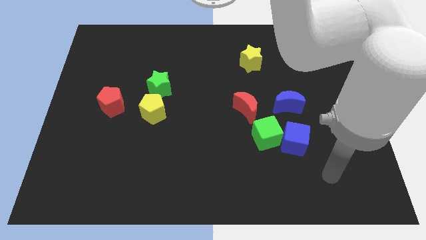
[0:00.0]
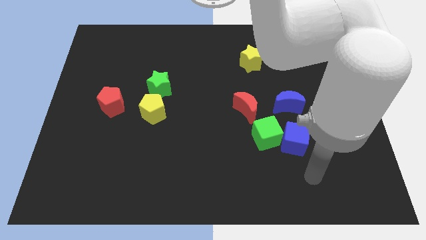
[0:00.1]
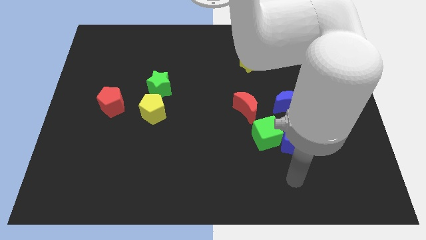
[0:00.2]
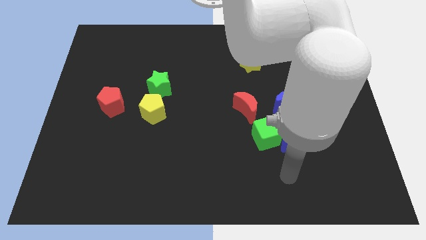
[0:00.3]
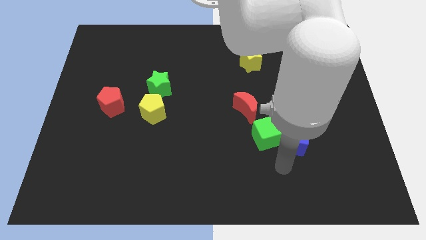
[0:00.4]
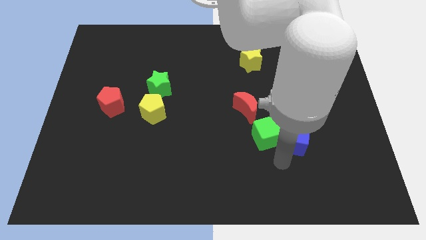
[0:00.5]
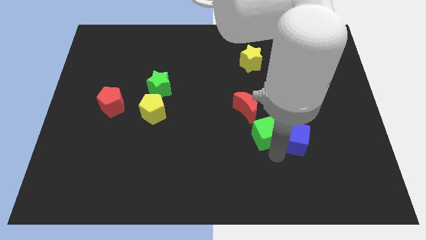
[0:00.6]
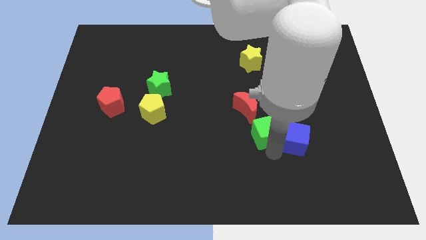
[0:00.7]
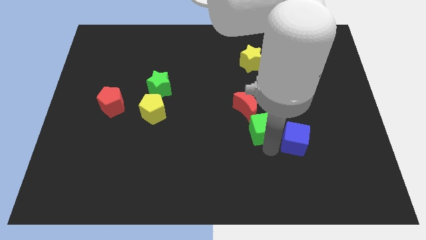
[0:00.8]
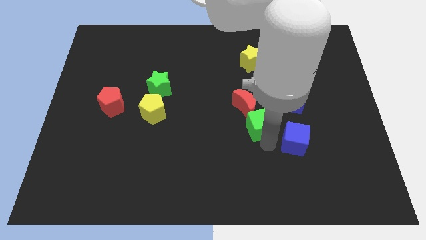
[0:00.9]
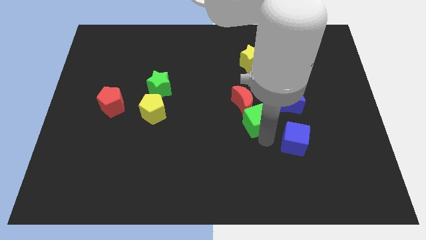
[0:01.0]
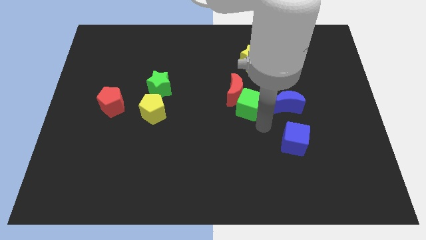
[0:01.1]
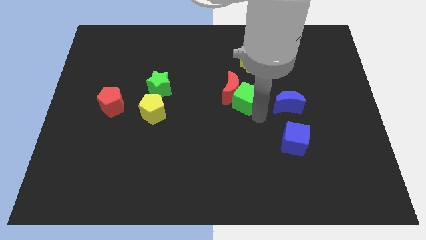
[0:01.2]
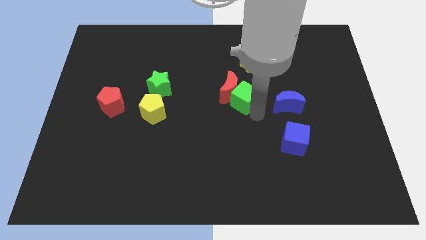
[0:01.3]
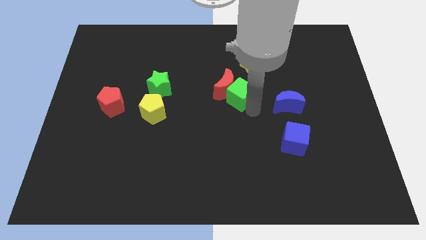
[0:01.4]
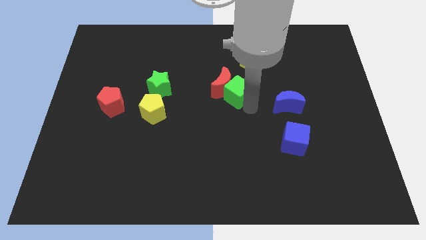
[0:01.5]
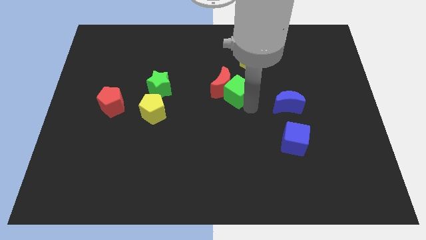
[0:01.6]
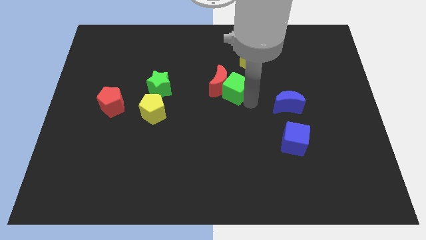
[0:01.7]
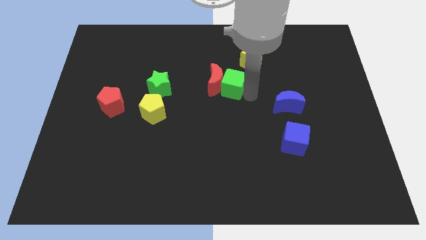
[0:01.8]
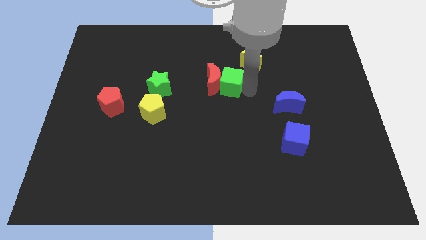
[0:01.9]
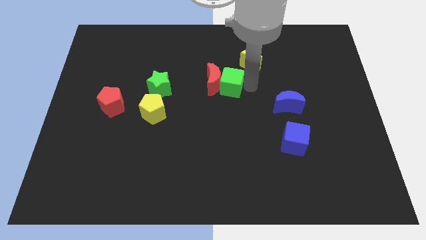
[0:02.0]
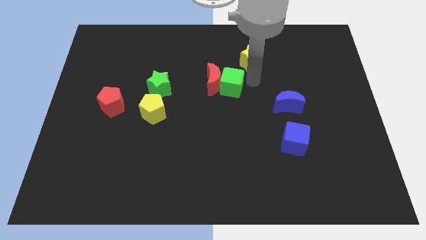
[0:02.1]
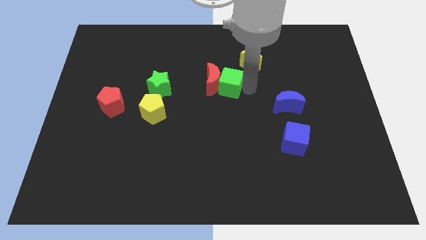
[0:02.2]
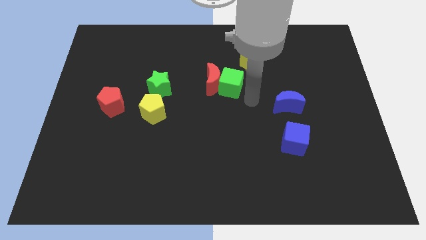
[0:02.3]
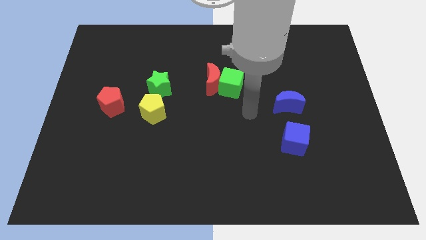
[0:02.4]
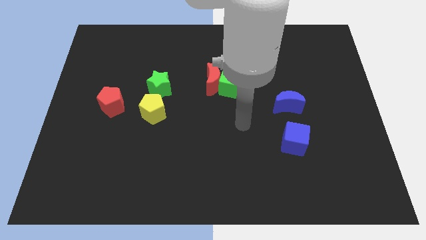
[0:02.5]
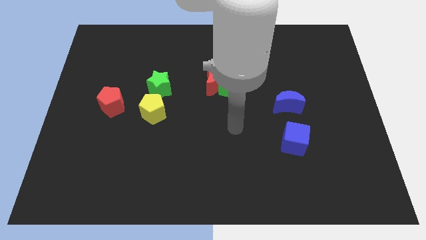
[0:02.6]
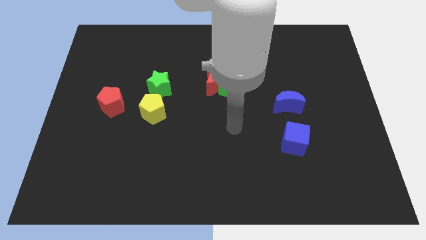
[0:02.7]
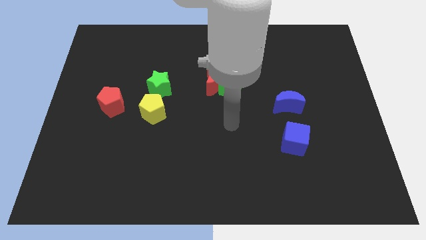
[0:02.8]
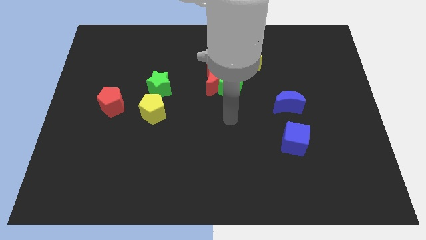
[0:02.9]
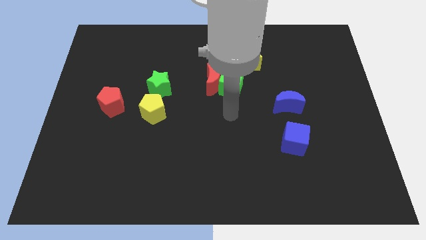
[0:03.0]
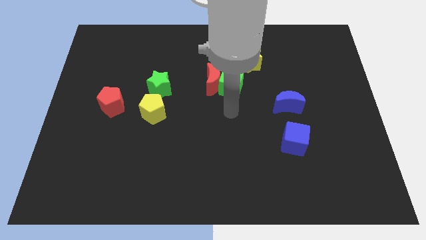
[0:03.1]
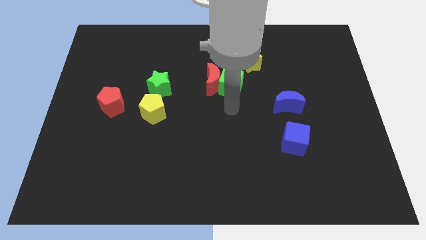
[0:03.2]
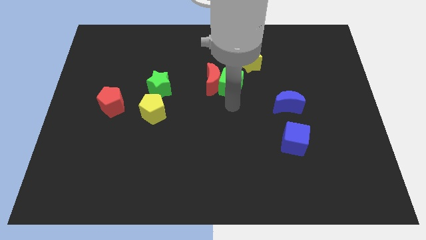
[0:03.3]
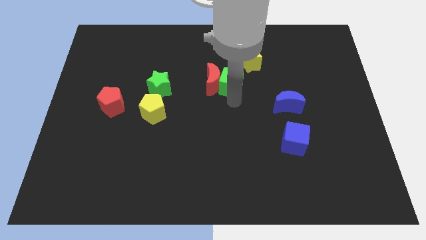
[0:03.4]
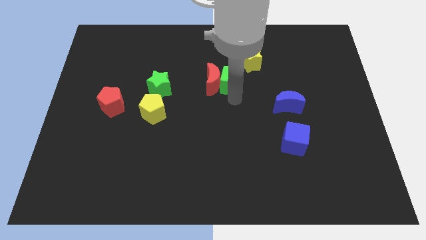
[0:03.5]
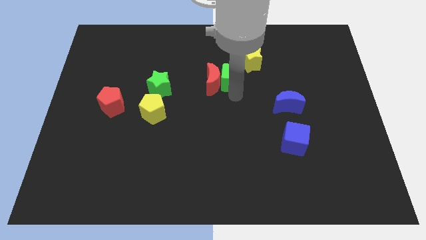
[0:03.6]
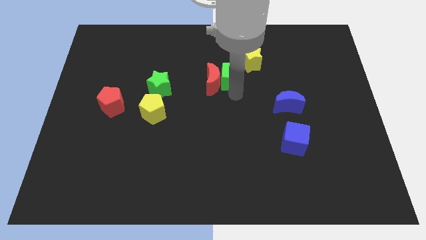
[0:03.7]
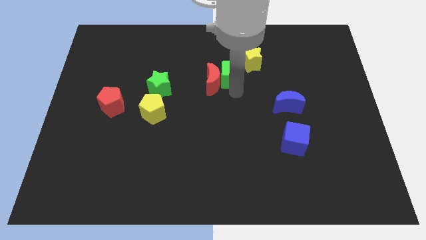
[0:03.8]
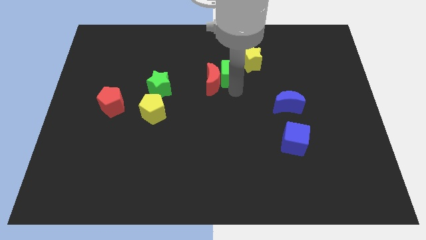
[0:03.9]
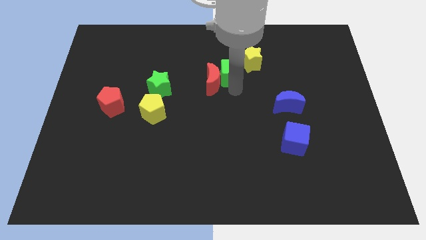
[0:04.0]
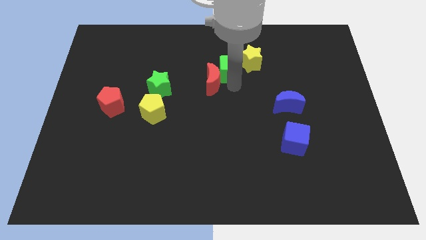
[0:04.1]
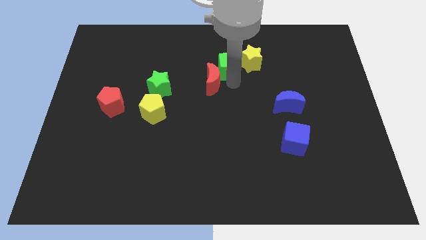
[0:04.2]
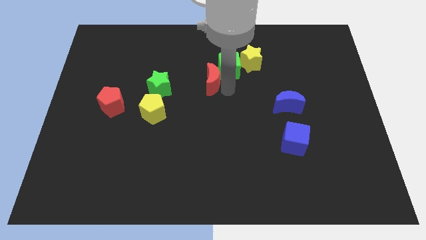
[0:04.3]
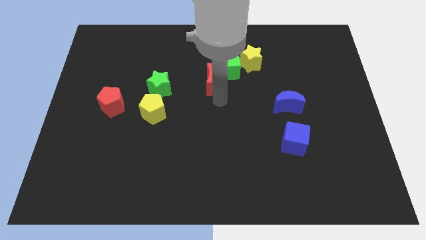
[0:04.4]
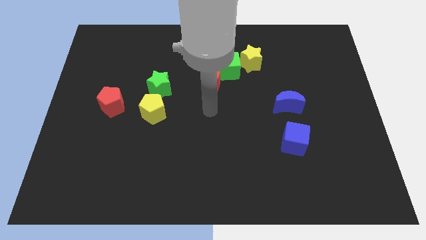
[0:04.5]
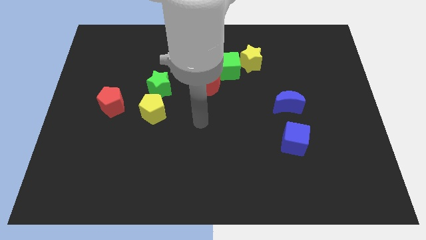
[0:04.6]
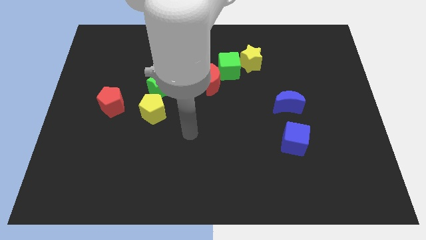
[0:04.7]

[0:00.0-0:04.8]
push the green cube and red moon to the top of the board

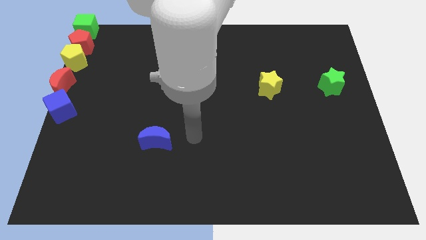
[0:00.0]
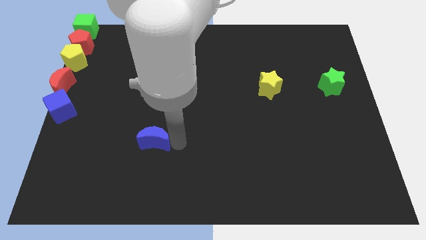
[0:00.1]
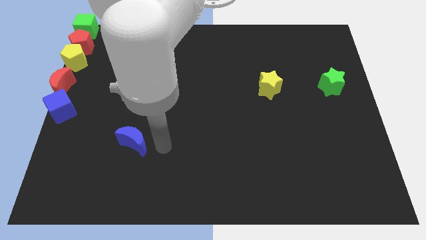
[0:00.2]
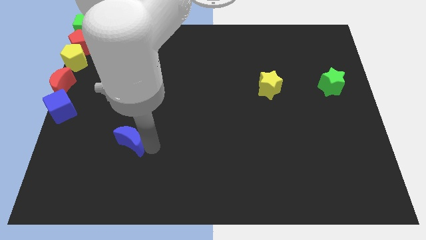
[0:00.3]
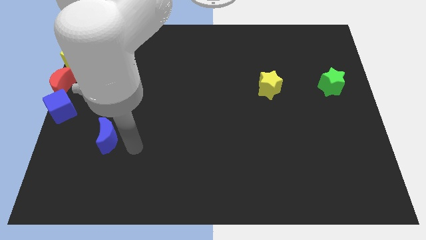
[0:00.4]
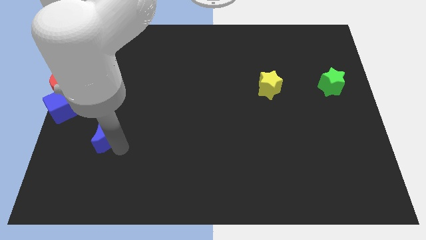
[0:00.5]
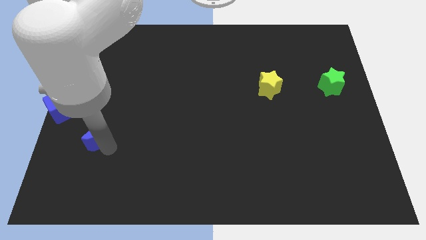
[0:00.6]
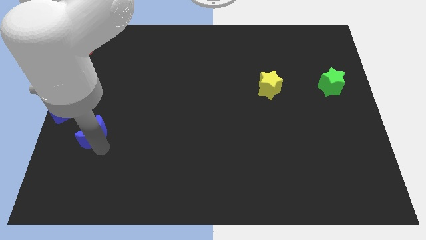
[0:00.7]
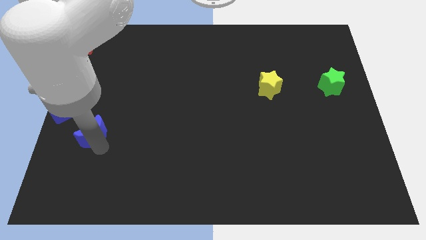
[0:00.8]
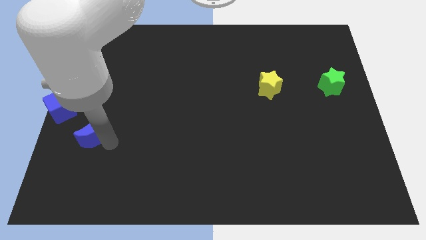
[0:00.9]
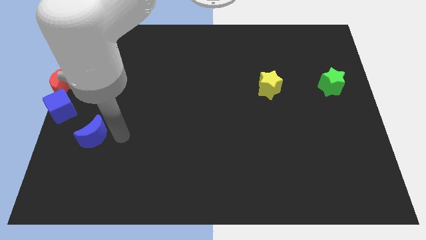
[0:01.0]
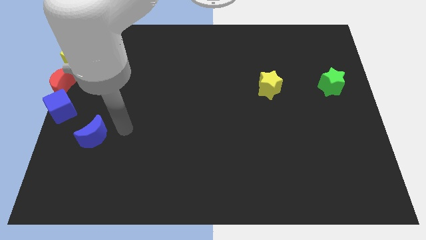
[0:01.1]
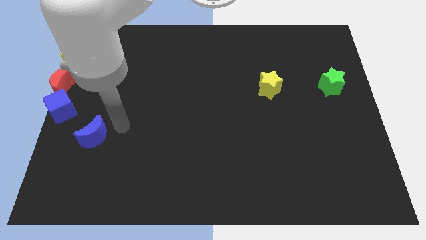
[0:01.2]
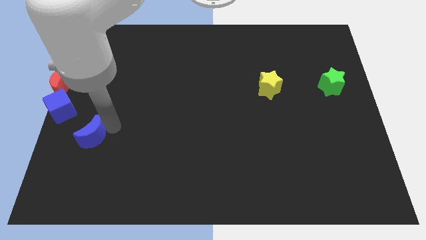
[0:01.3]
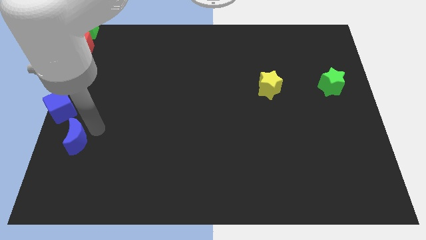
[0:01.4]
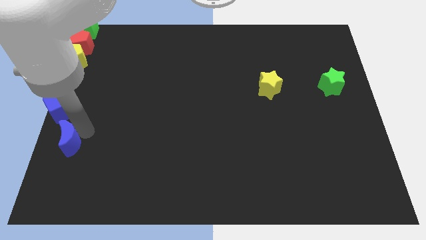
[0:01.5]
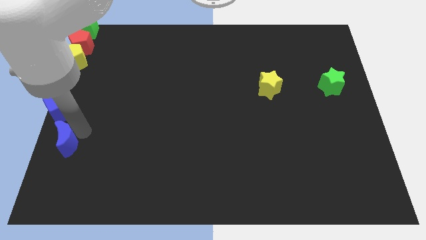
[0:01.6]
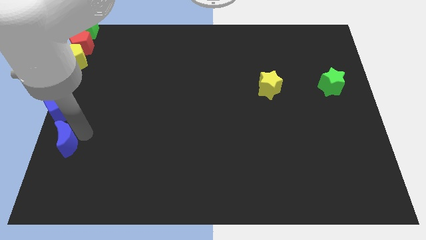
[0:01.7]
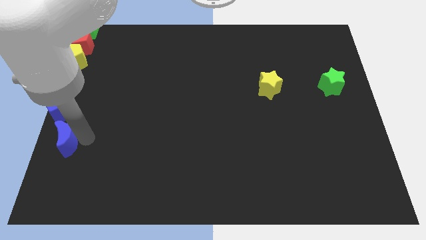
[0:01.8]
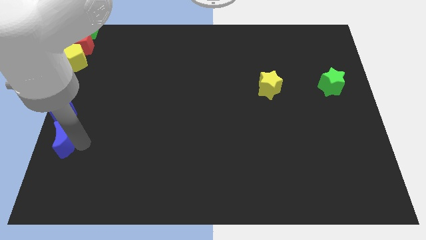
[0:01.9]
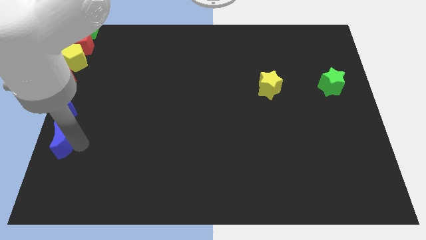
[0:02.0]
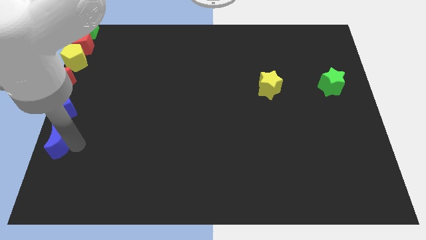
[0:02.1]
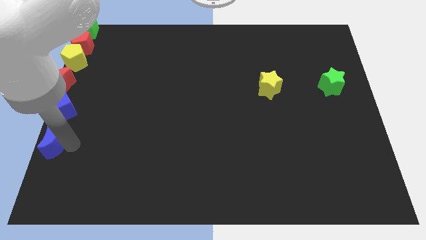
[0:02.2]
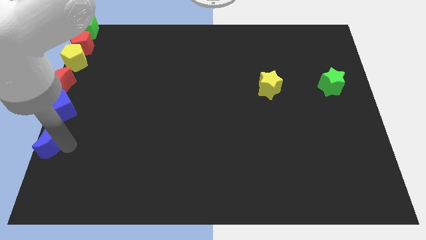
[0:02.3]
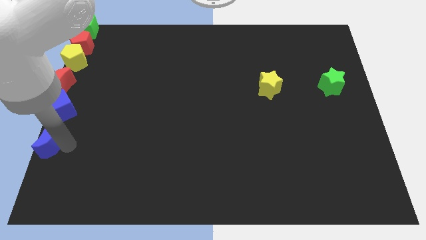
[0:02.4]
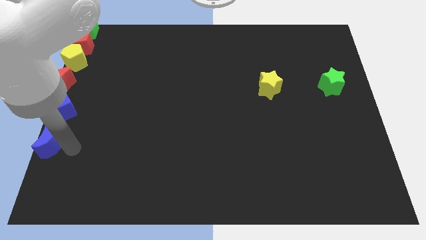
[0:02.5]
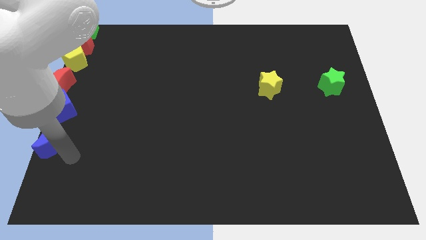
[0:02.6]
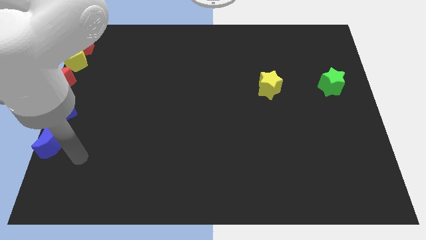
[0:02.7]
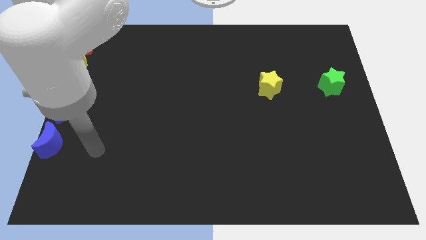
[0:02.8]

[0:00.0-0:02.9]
push the blue crescent to the bottom of the blue cube

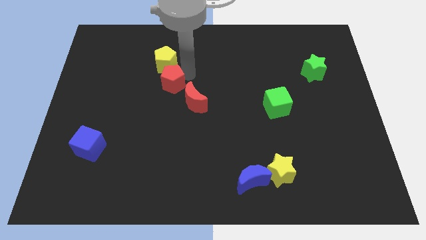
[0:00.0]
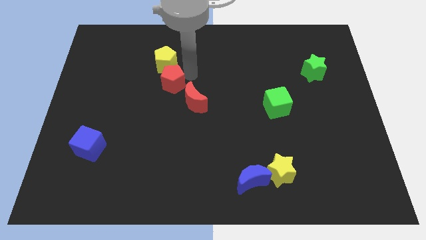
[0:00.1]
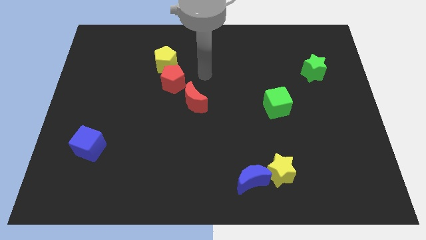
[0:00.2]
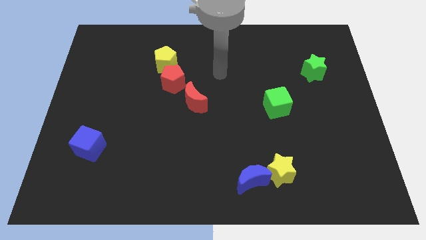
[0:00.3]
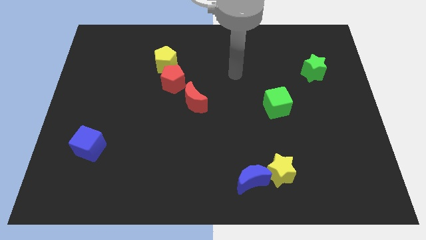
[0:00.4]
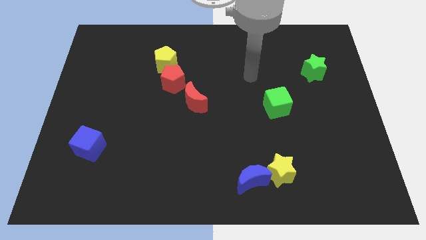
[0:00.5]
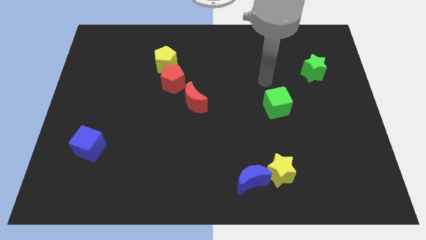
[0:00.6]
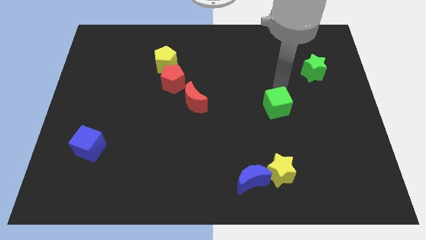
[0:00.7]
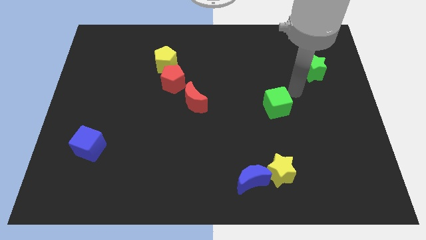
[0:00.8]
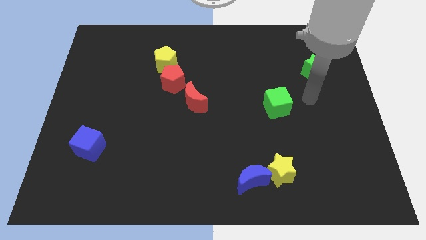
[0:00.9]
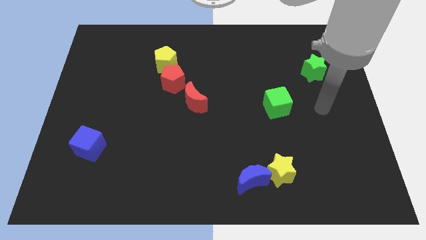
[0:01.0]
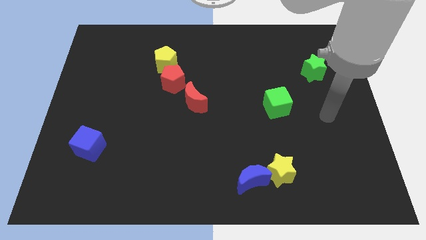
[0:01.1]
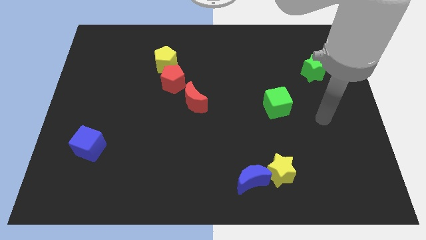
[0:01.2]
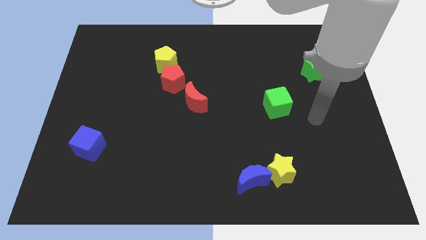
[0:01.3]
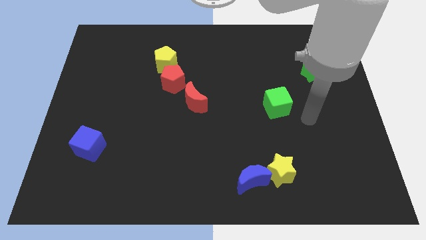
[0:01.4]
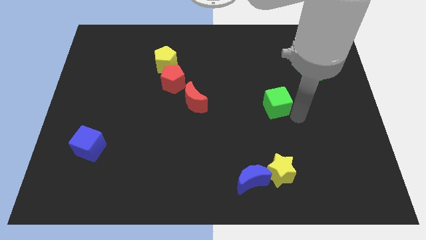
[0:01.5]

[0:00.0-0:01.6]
place your arm towards the bottom right side of the green cube
